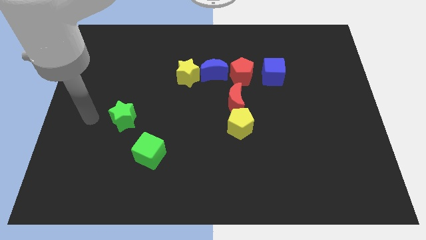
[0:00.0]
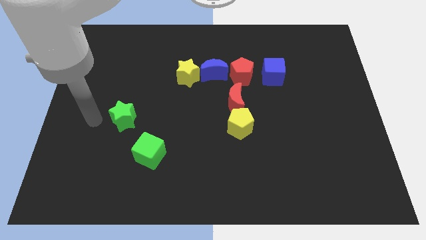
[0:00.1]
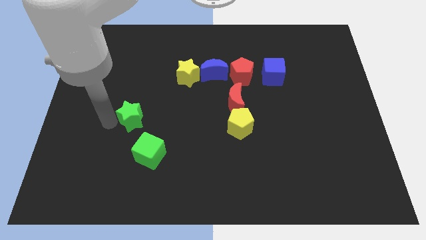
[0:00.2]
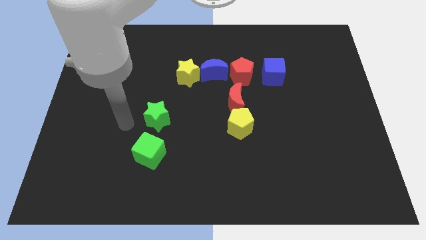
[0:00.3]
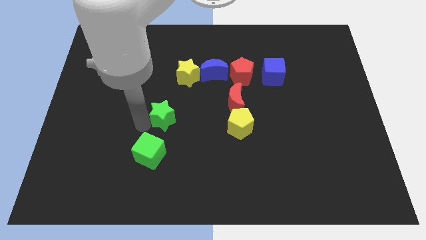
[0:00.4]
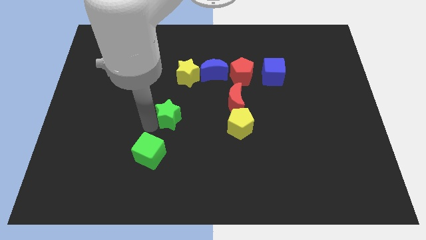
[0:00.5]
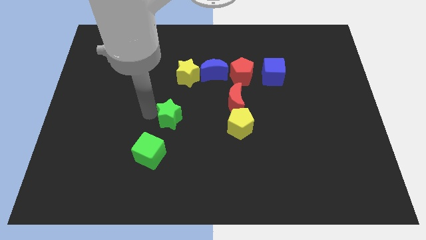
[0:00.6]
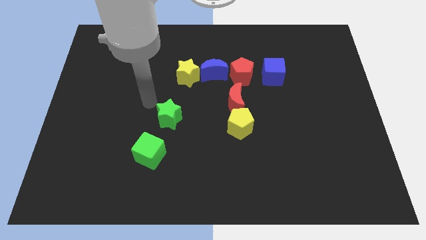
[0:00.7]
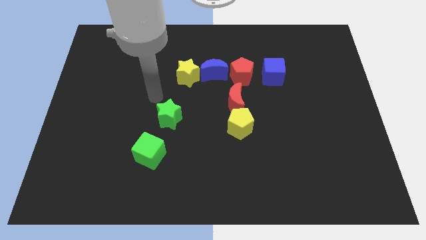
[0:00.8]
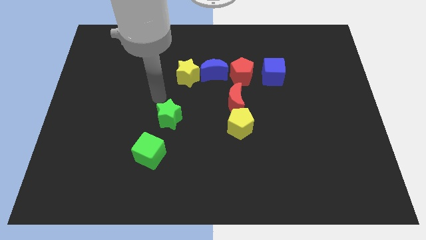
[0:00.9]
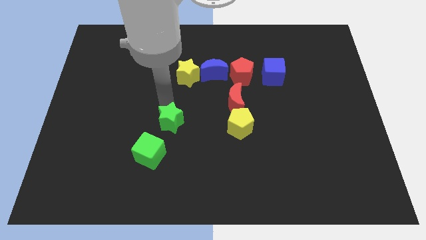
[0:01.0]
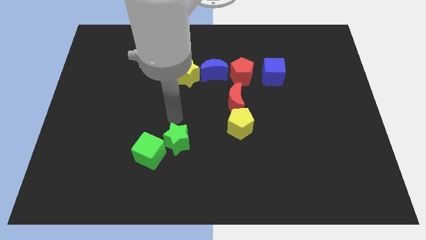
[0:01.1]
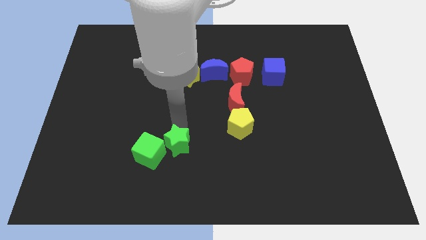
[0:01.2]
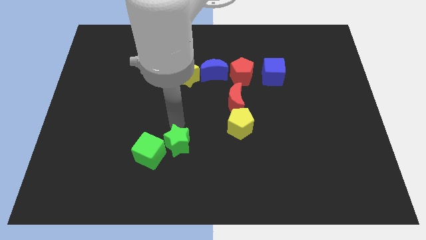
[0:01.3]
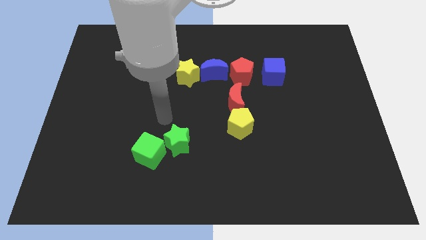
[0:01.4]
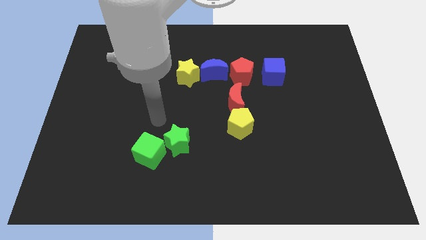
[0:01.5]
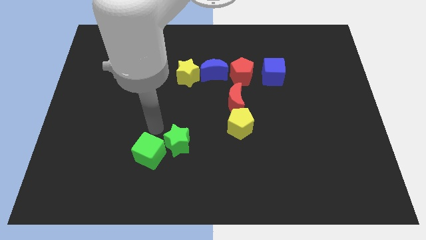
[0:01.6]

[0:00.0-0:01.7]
move the green star to the right side of the green cube

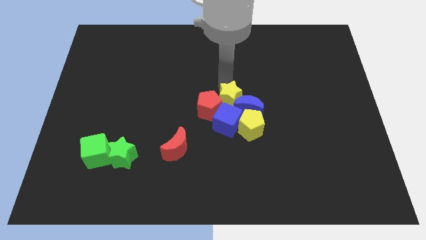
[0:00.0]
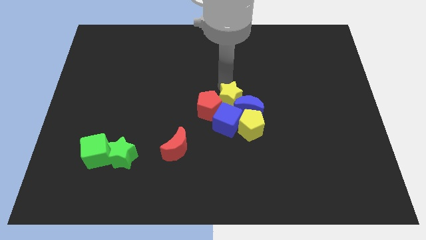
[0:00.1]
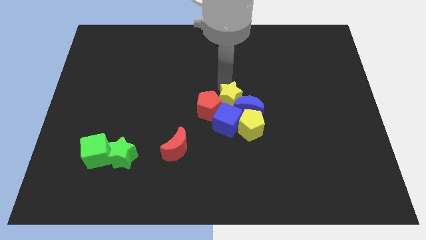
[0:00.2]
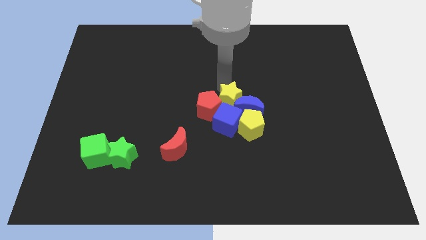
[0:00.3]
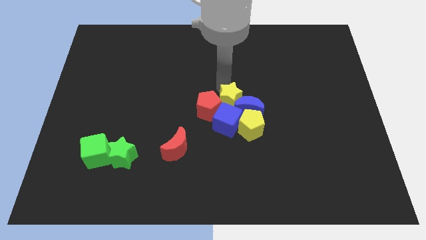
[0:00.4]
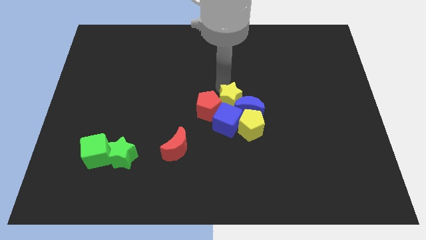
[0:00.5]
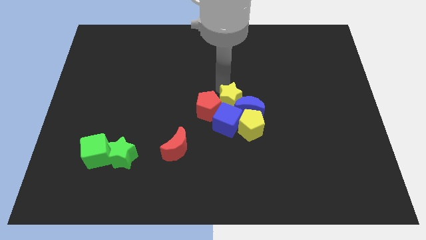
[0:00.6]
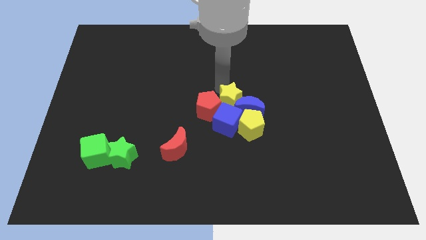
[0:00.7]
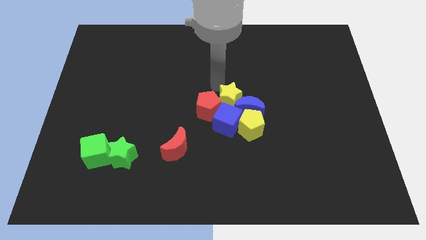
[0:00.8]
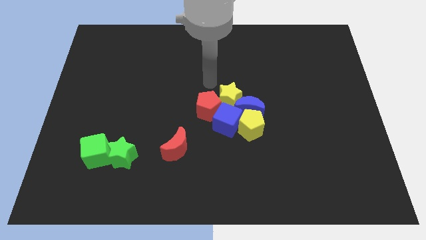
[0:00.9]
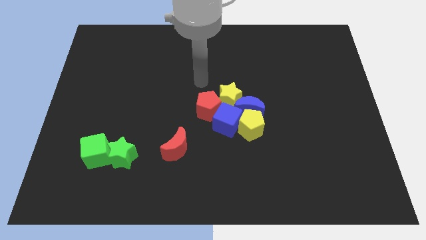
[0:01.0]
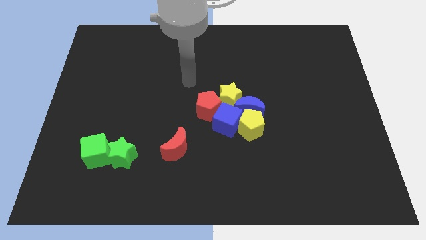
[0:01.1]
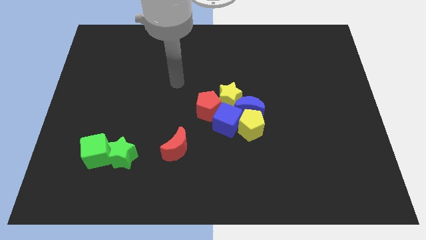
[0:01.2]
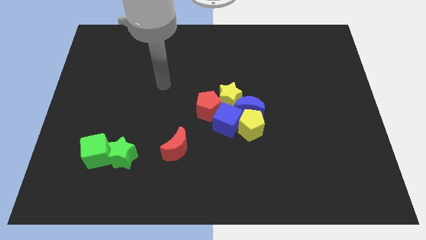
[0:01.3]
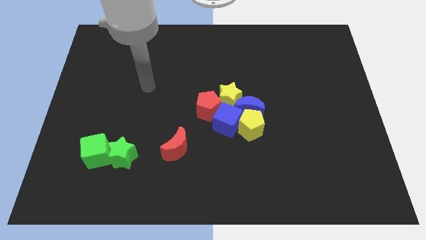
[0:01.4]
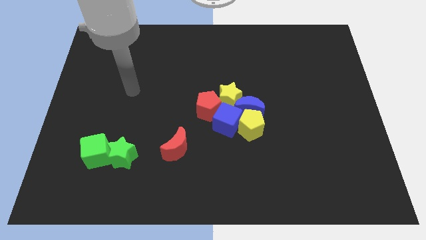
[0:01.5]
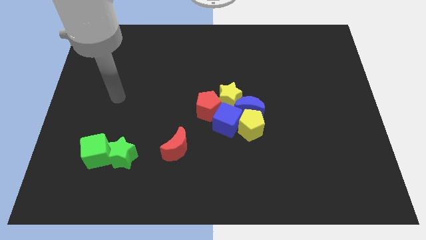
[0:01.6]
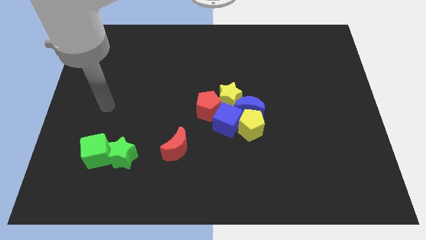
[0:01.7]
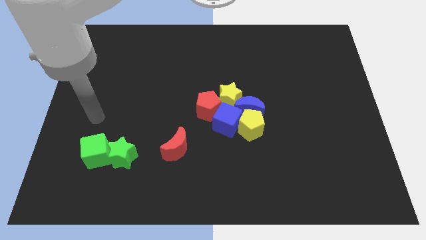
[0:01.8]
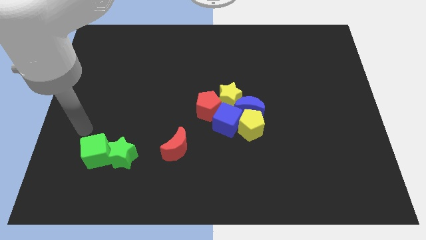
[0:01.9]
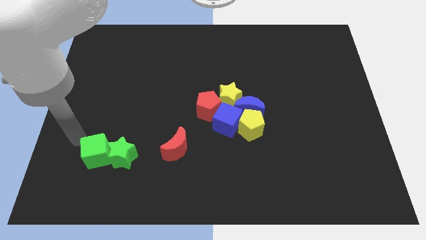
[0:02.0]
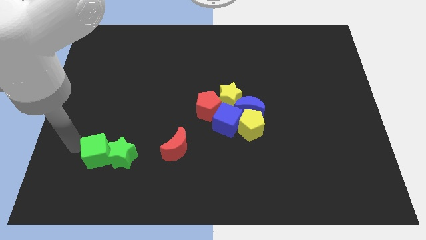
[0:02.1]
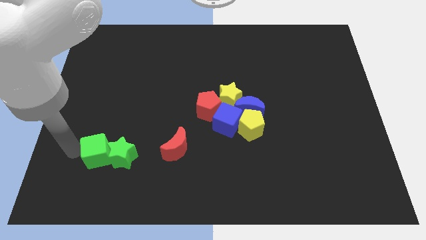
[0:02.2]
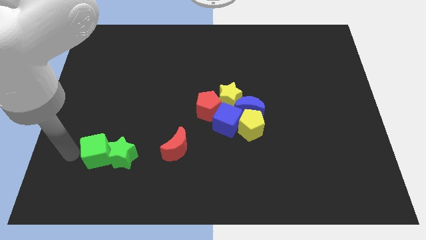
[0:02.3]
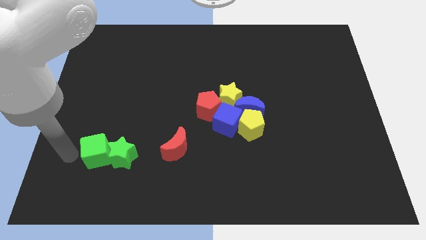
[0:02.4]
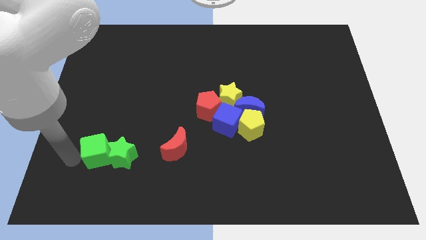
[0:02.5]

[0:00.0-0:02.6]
move away from the yellow star

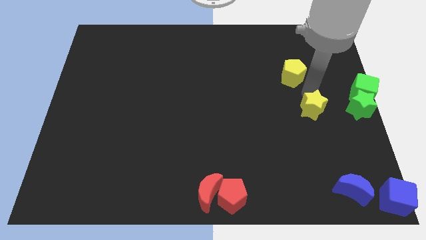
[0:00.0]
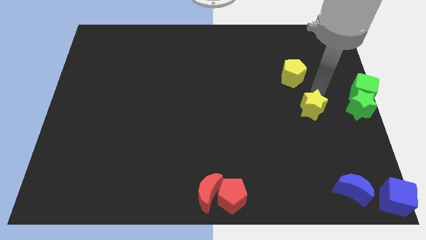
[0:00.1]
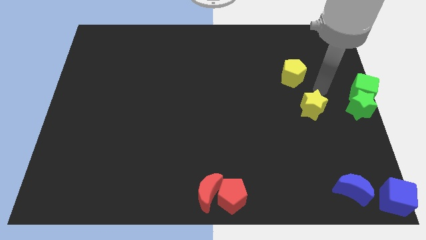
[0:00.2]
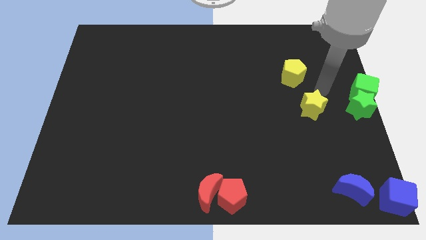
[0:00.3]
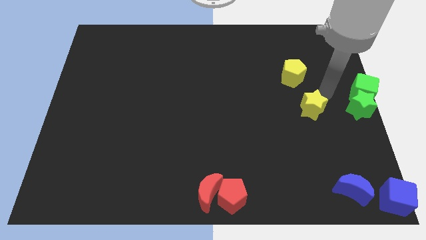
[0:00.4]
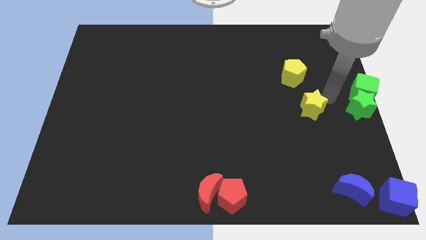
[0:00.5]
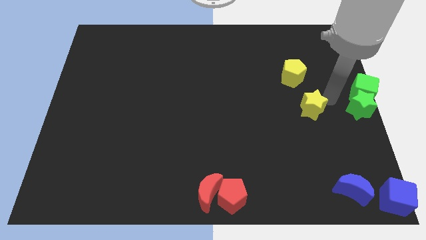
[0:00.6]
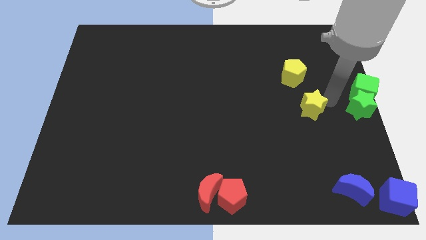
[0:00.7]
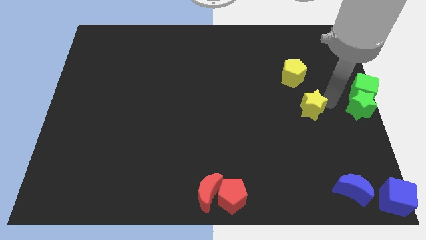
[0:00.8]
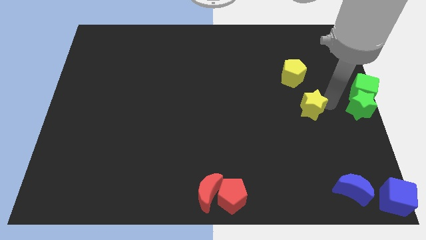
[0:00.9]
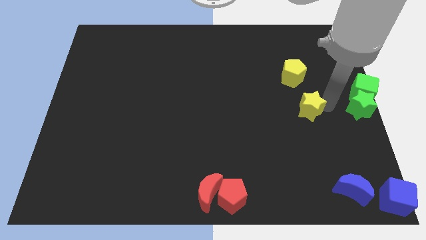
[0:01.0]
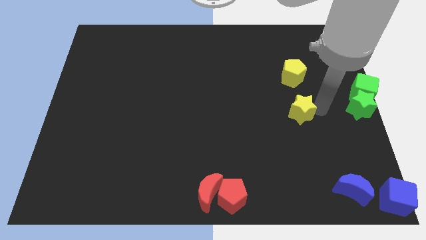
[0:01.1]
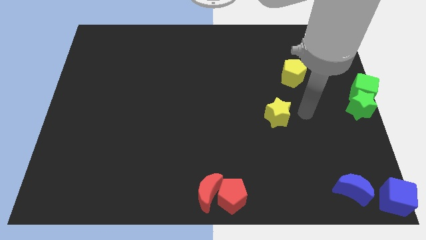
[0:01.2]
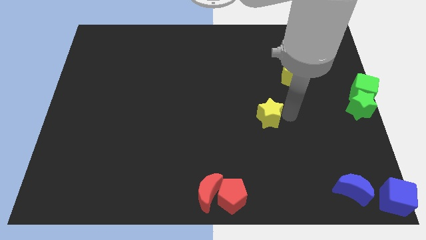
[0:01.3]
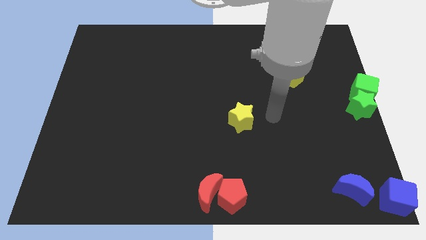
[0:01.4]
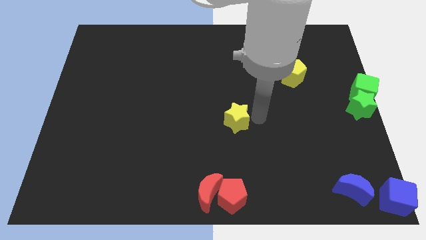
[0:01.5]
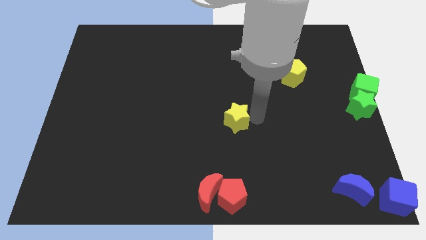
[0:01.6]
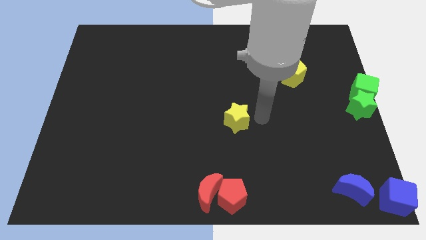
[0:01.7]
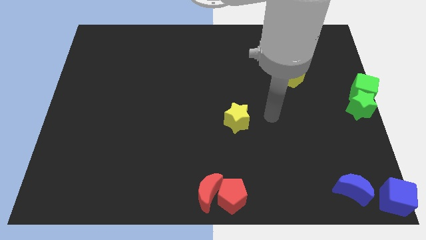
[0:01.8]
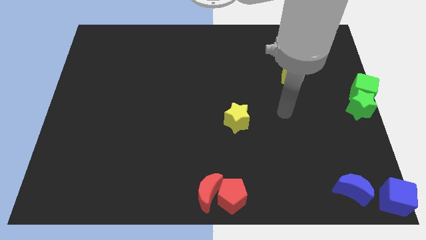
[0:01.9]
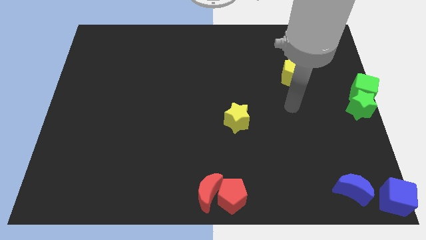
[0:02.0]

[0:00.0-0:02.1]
move the yellow star above red pentagon

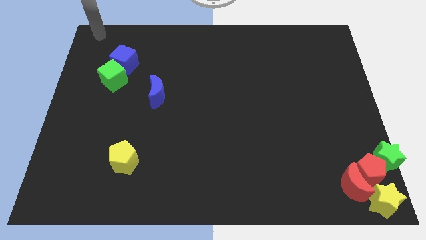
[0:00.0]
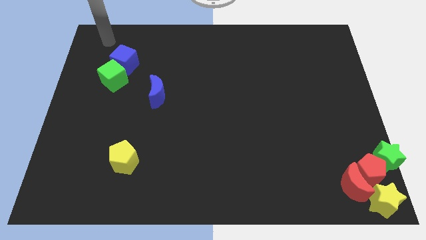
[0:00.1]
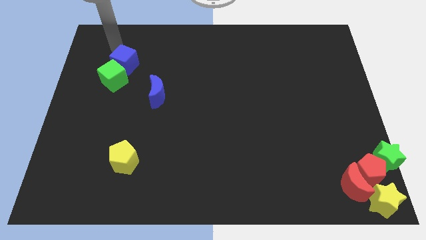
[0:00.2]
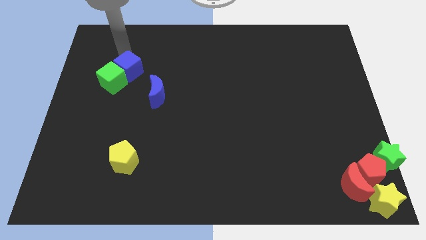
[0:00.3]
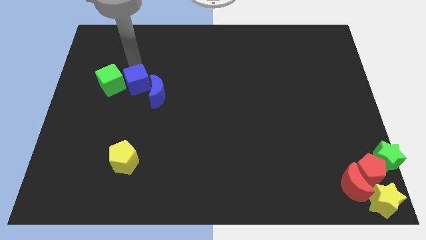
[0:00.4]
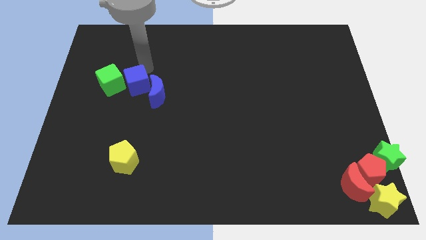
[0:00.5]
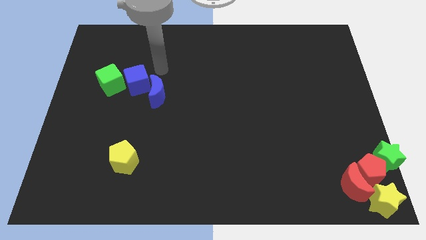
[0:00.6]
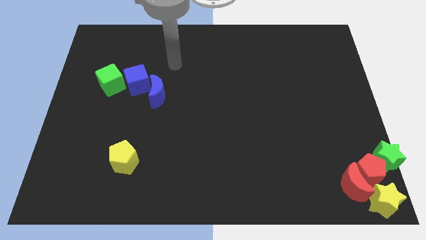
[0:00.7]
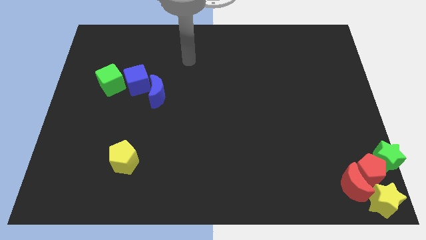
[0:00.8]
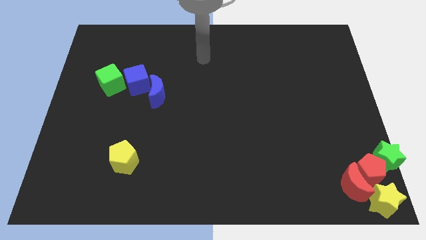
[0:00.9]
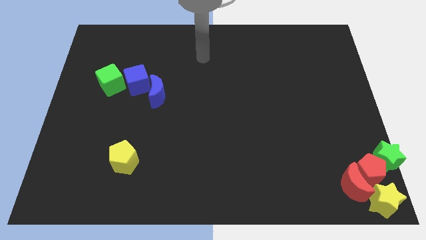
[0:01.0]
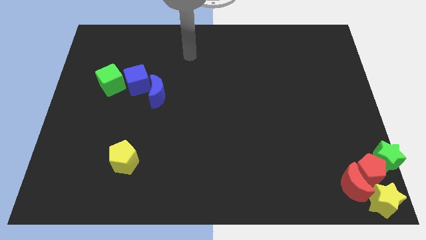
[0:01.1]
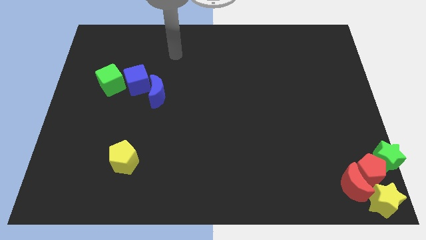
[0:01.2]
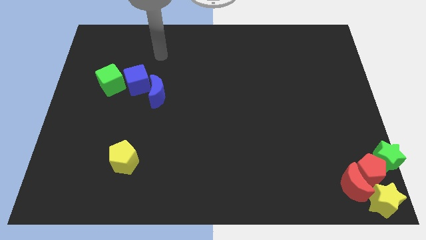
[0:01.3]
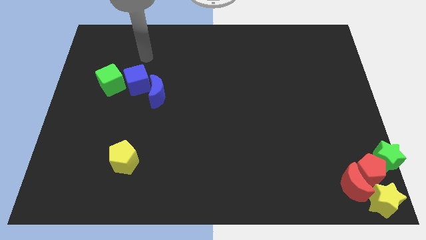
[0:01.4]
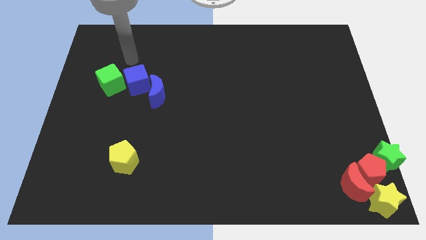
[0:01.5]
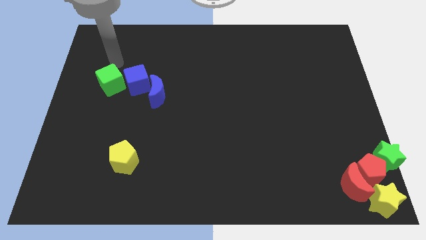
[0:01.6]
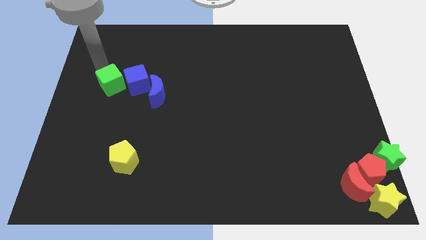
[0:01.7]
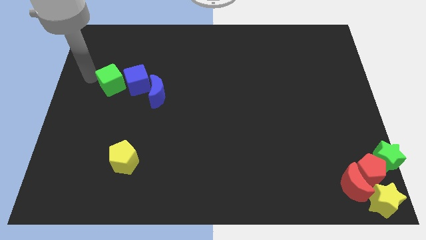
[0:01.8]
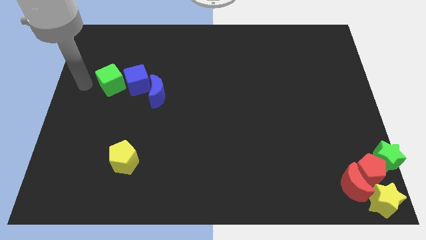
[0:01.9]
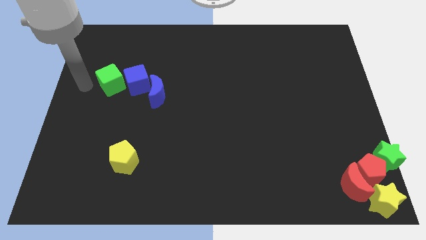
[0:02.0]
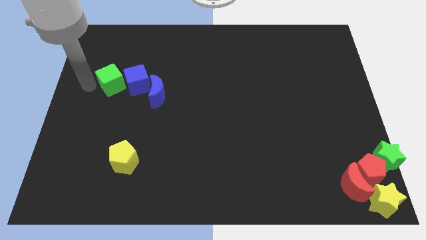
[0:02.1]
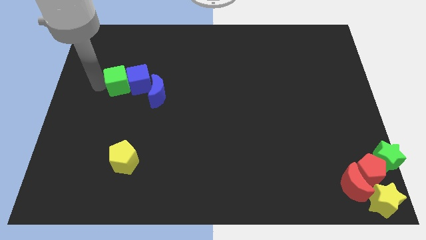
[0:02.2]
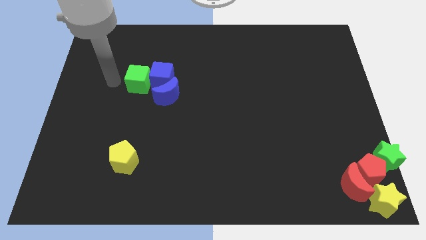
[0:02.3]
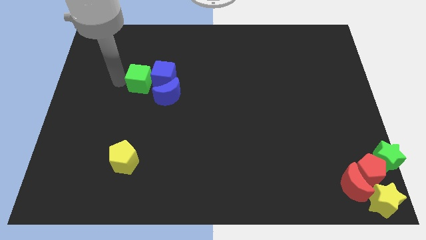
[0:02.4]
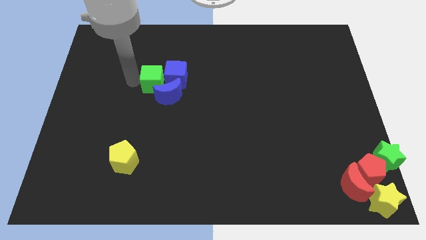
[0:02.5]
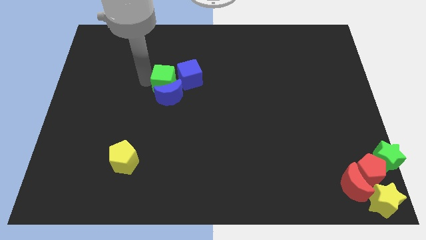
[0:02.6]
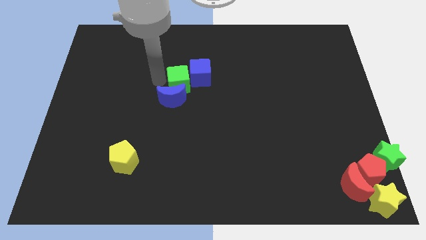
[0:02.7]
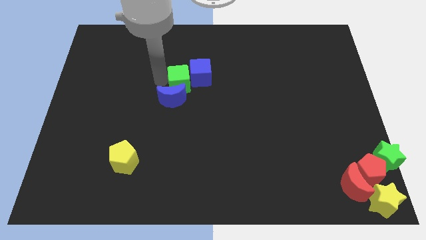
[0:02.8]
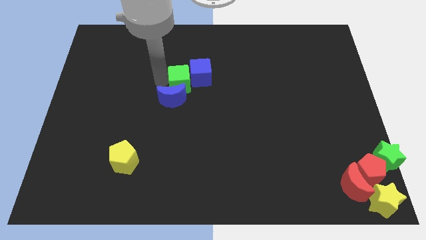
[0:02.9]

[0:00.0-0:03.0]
push the green cube in between the blue cube and blue crescent
